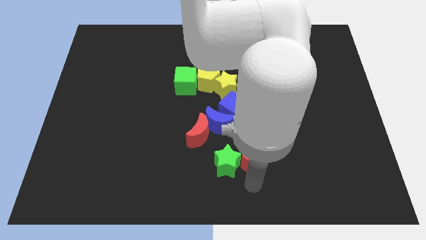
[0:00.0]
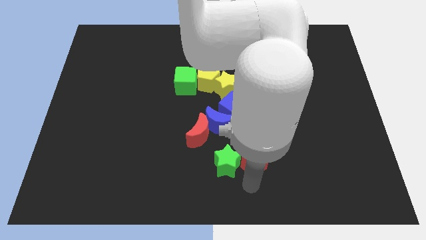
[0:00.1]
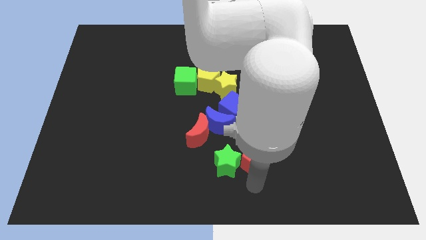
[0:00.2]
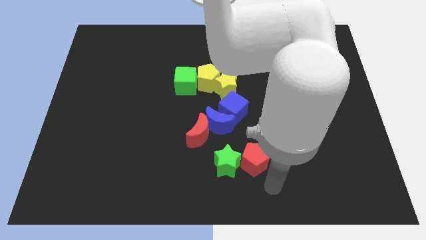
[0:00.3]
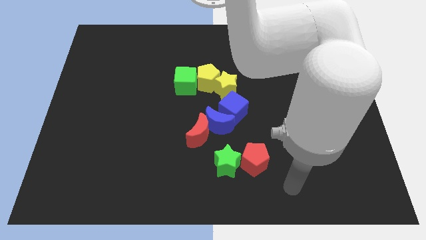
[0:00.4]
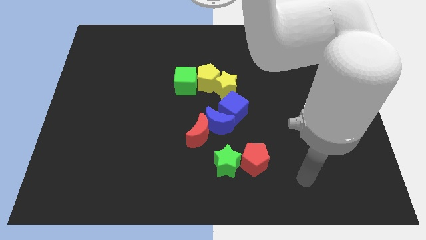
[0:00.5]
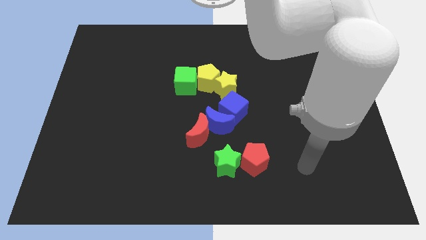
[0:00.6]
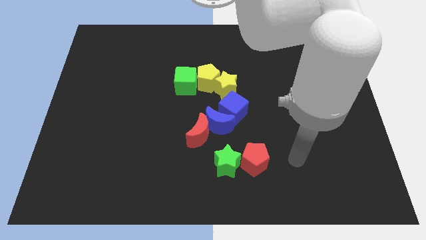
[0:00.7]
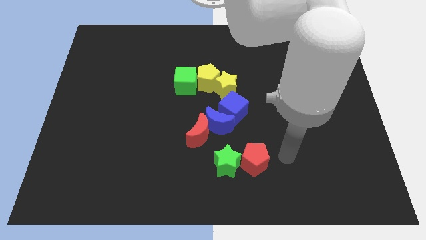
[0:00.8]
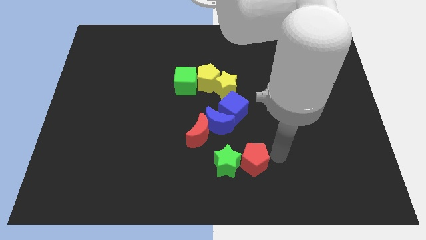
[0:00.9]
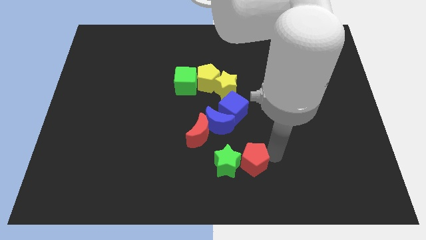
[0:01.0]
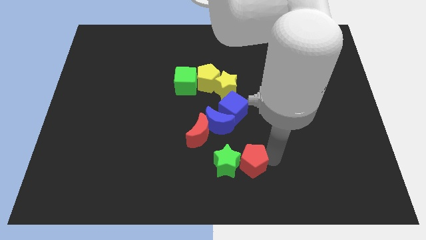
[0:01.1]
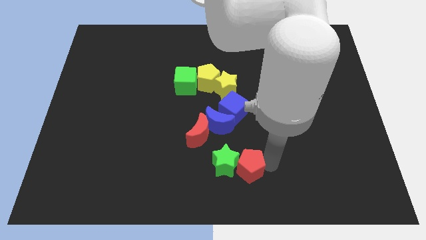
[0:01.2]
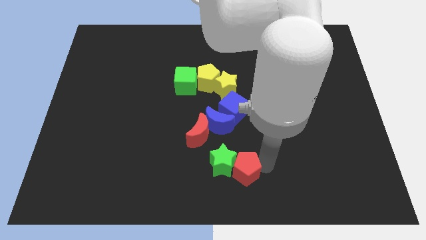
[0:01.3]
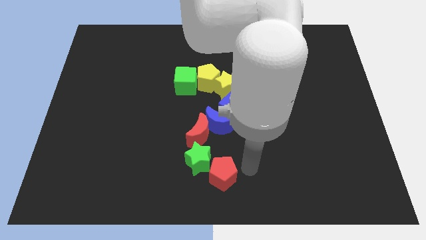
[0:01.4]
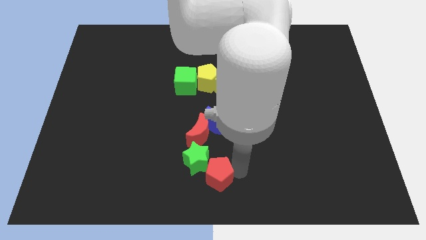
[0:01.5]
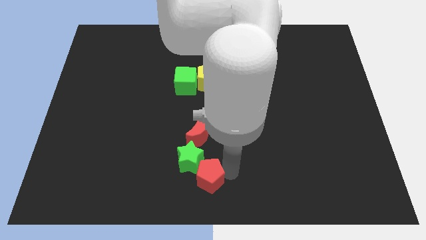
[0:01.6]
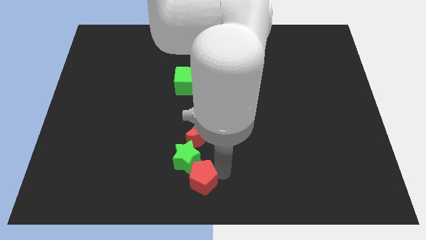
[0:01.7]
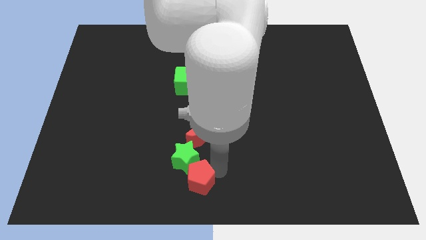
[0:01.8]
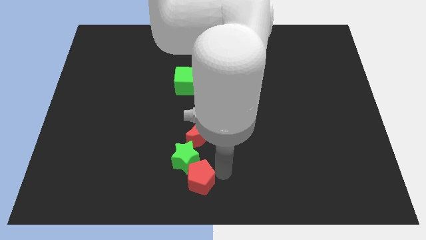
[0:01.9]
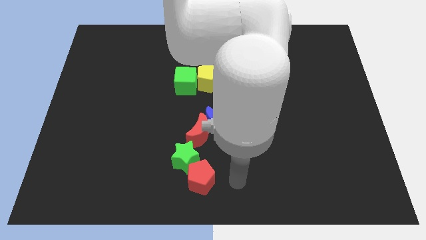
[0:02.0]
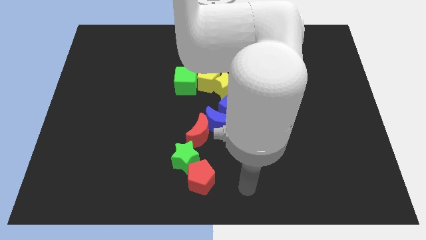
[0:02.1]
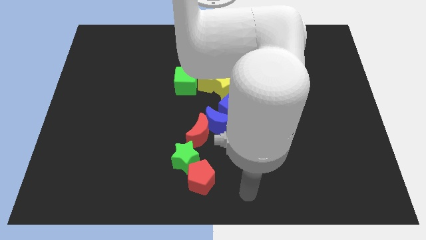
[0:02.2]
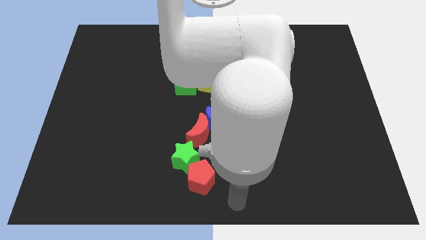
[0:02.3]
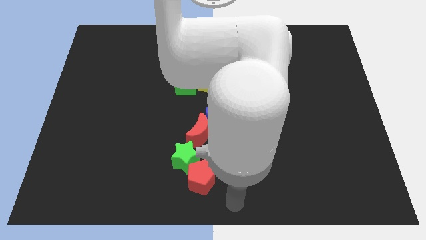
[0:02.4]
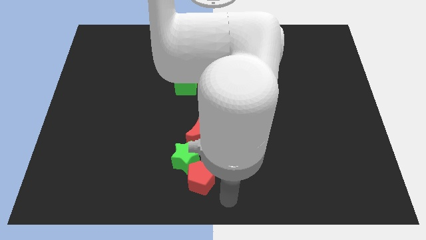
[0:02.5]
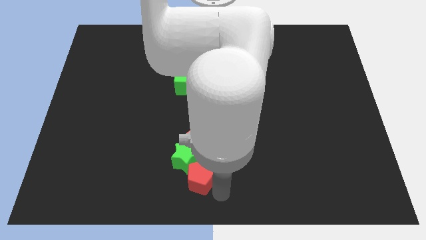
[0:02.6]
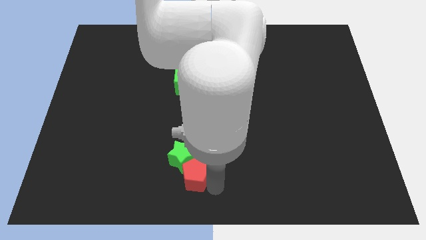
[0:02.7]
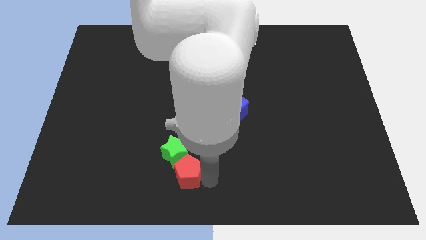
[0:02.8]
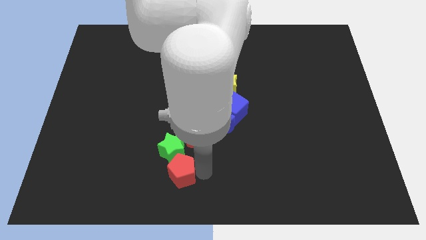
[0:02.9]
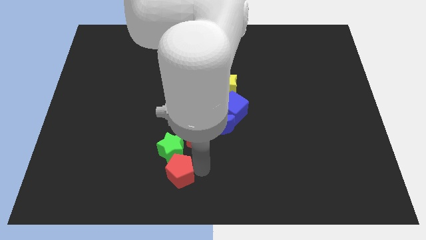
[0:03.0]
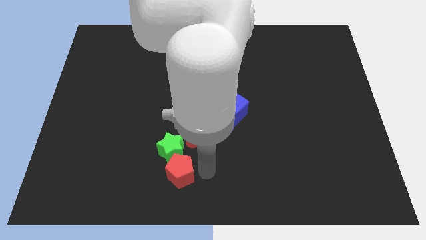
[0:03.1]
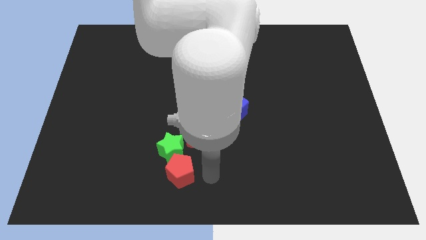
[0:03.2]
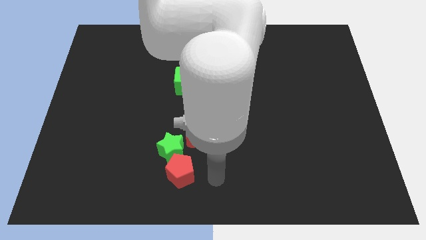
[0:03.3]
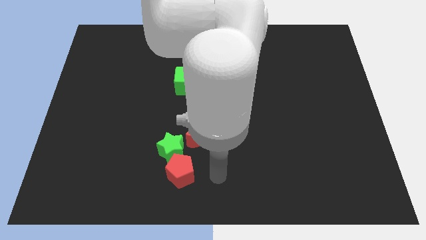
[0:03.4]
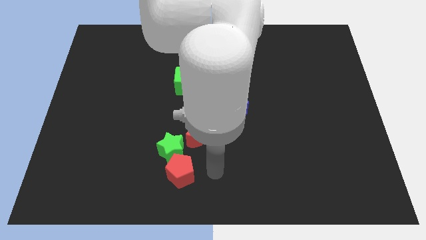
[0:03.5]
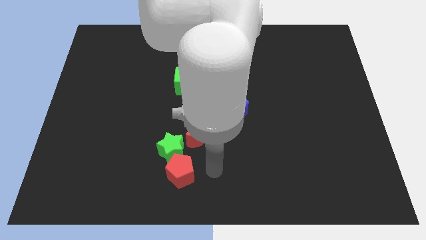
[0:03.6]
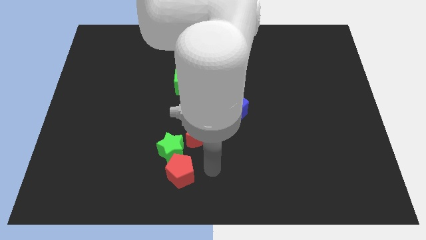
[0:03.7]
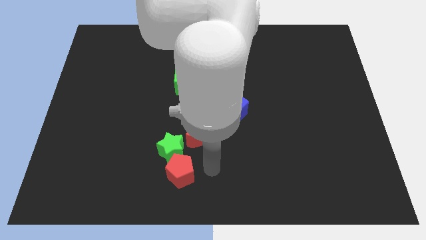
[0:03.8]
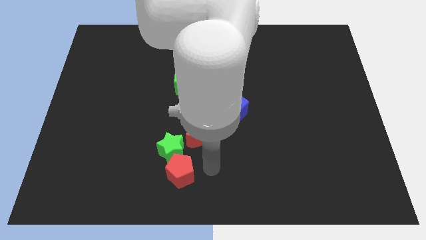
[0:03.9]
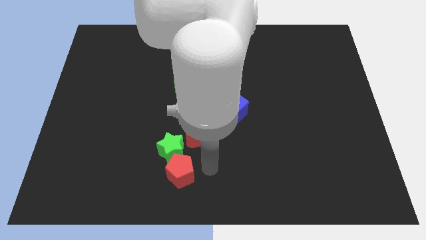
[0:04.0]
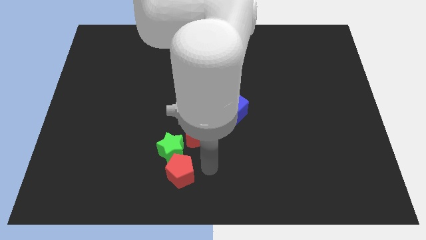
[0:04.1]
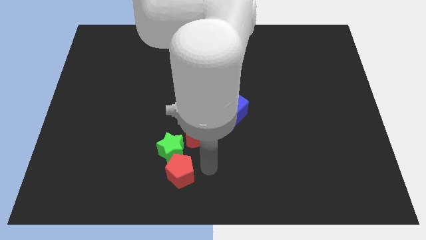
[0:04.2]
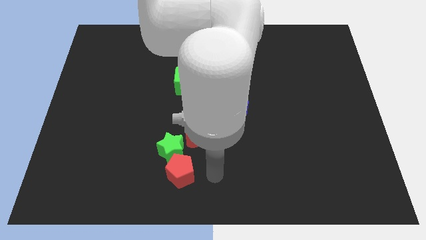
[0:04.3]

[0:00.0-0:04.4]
move green star along with red pentagon to the red crescent

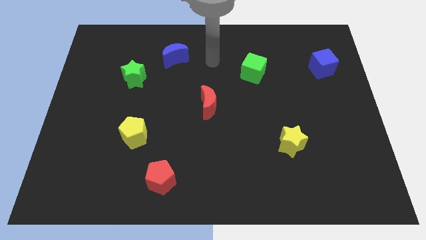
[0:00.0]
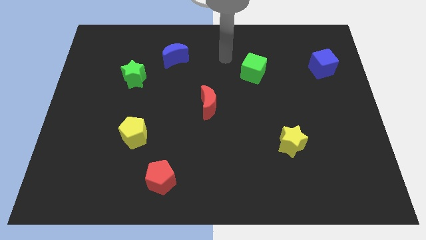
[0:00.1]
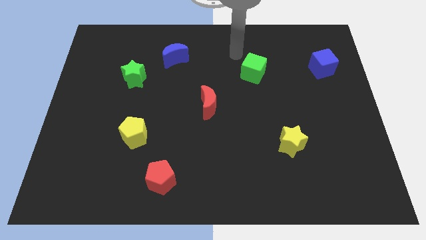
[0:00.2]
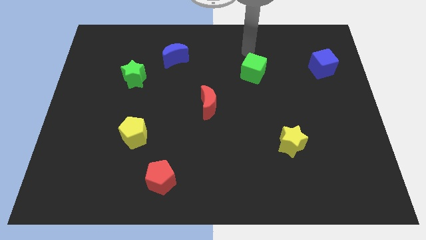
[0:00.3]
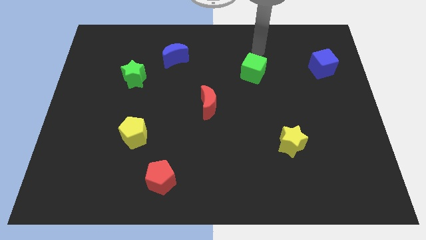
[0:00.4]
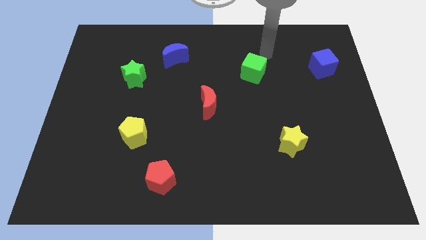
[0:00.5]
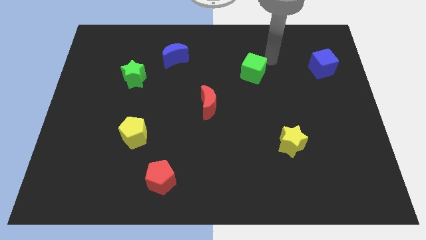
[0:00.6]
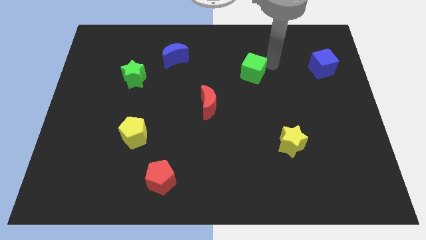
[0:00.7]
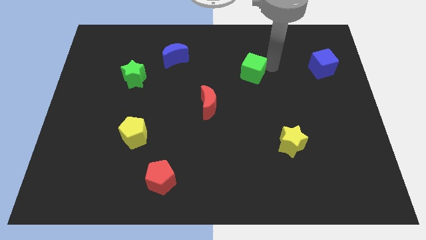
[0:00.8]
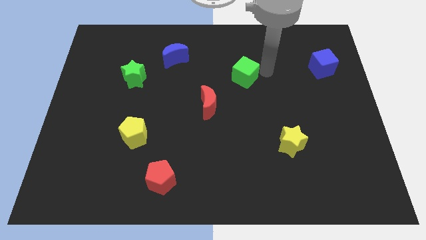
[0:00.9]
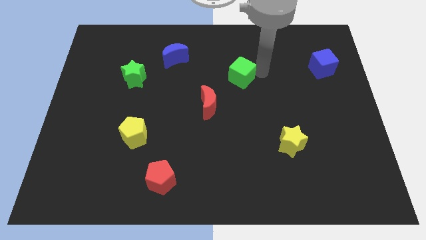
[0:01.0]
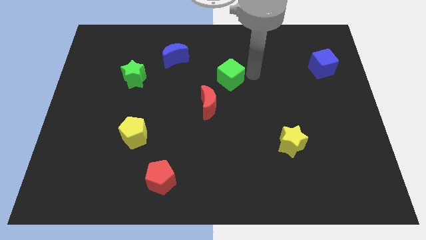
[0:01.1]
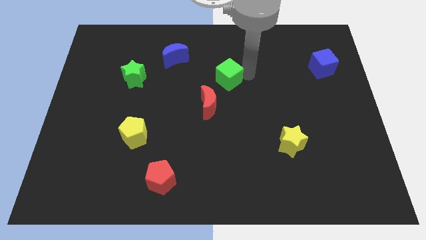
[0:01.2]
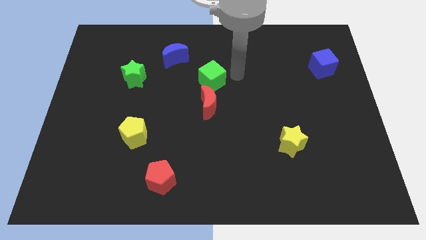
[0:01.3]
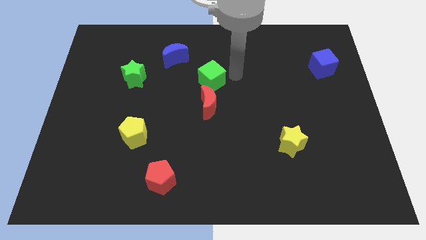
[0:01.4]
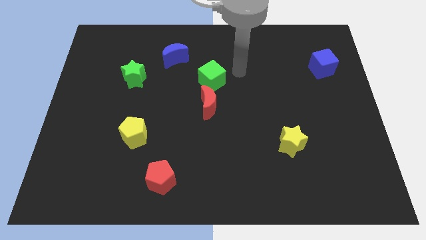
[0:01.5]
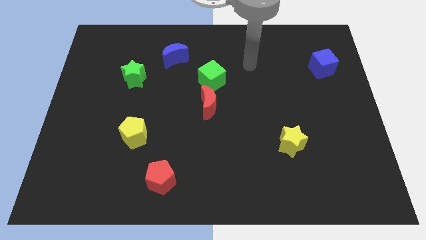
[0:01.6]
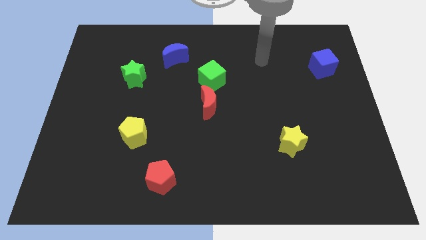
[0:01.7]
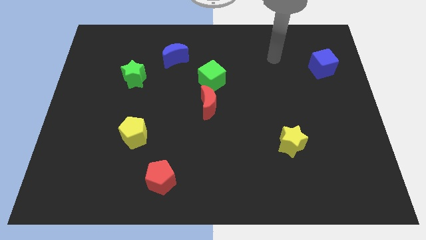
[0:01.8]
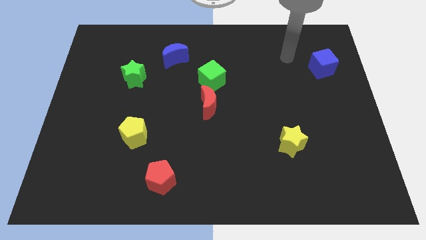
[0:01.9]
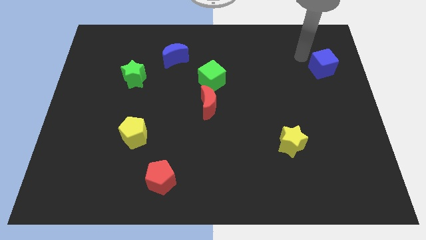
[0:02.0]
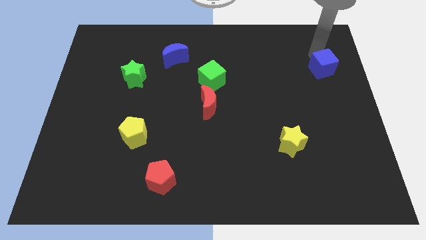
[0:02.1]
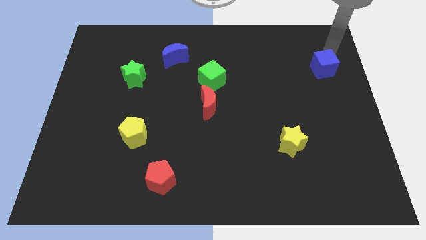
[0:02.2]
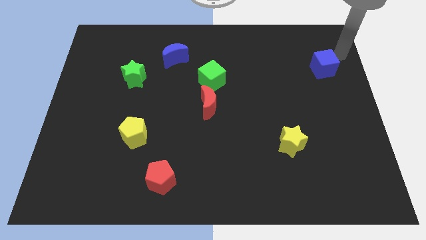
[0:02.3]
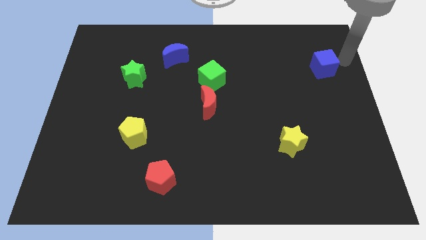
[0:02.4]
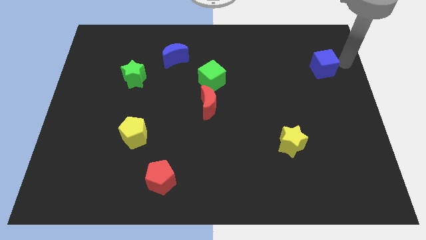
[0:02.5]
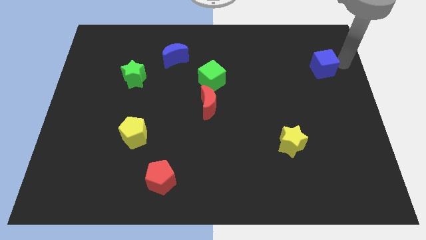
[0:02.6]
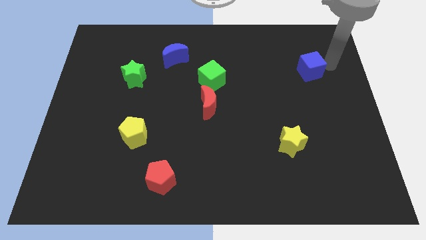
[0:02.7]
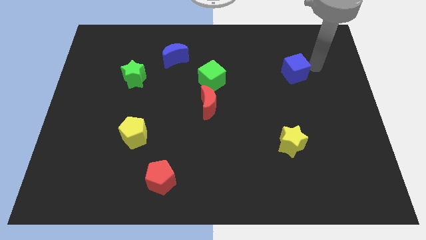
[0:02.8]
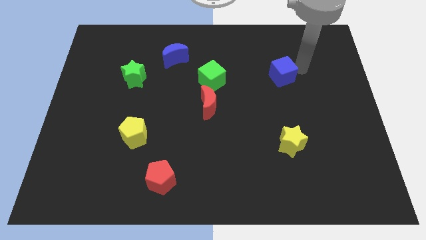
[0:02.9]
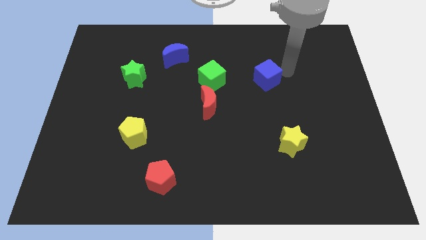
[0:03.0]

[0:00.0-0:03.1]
place the green cube above the red crescent

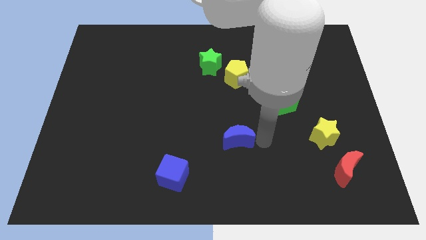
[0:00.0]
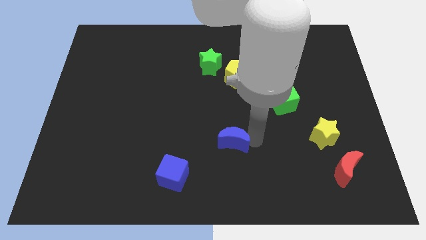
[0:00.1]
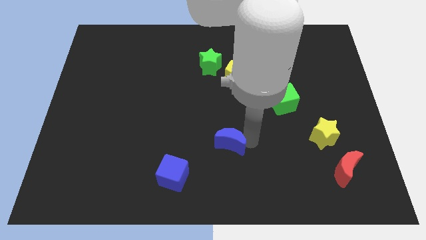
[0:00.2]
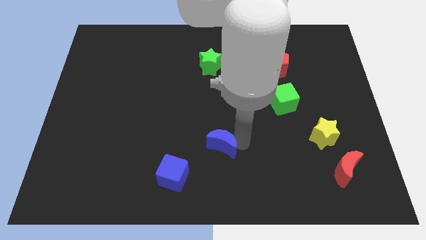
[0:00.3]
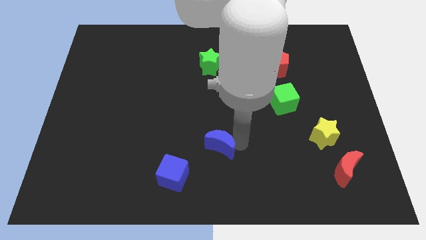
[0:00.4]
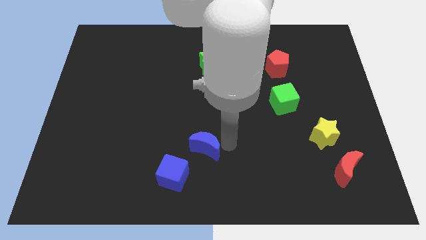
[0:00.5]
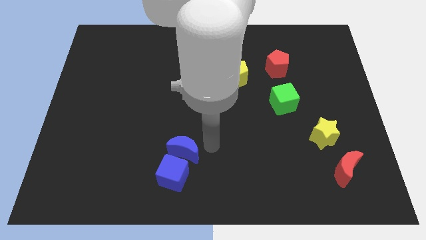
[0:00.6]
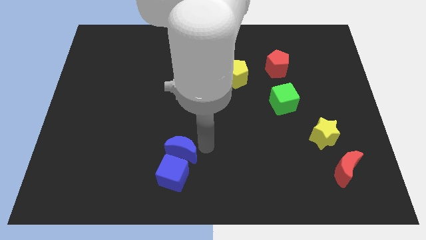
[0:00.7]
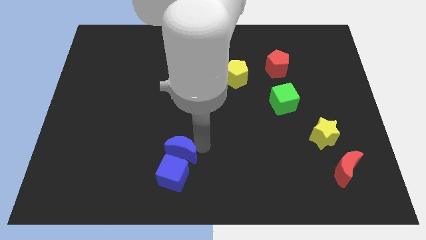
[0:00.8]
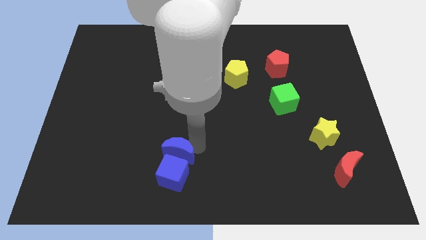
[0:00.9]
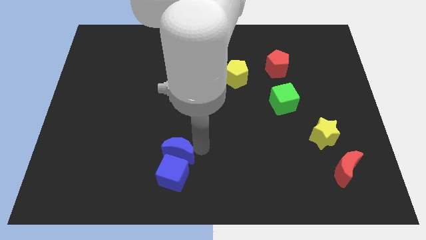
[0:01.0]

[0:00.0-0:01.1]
place the blue moon above the blue cube

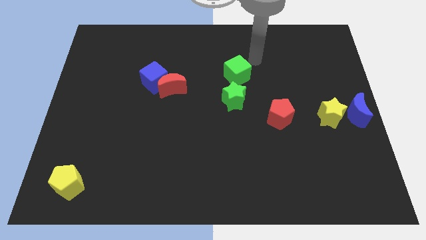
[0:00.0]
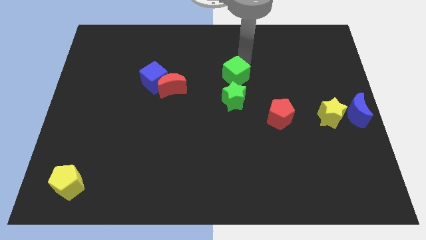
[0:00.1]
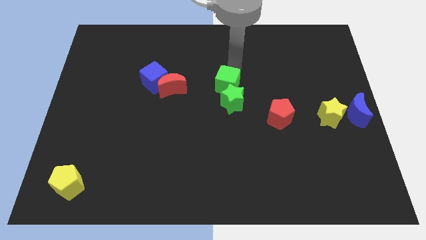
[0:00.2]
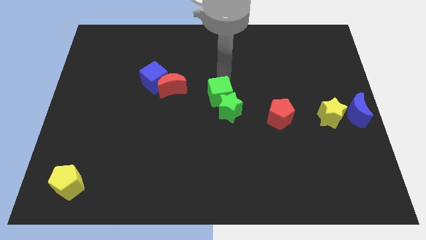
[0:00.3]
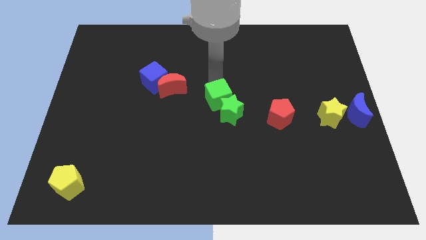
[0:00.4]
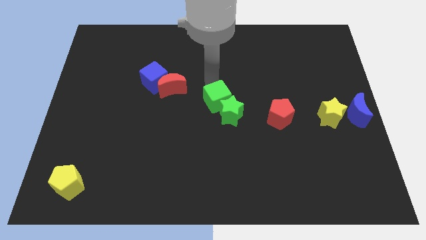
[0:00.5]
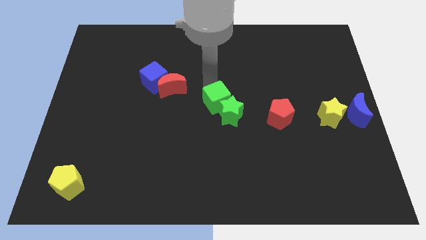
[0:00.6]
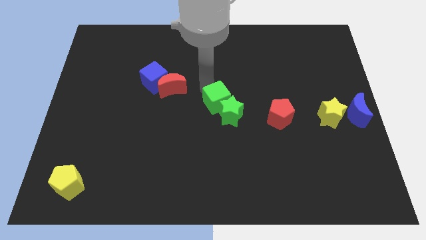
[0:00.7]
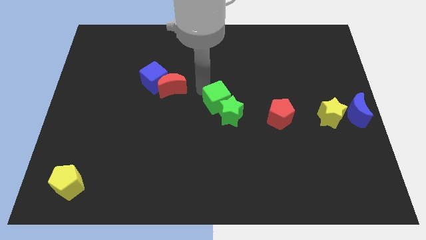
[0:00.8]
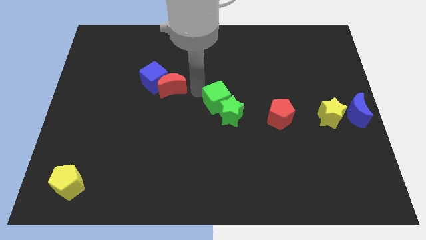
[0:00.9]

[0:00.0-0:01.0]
move the green cube into the green star
